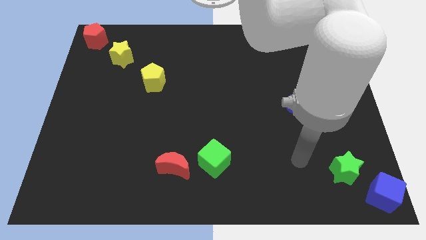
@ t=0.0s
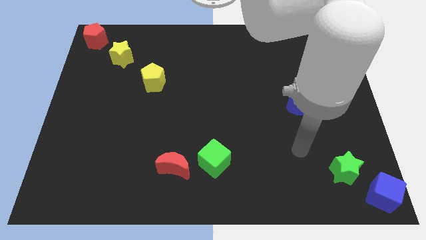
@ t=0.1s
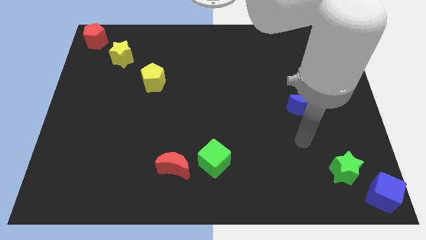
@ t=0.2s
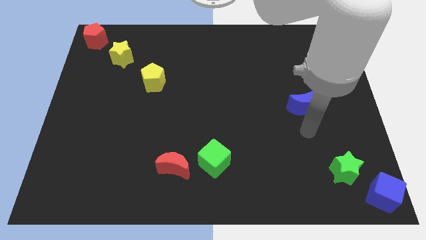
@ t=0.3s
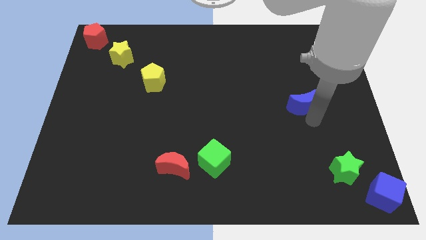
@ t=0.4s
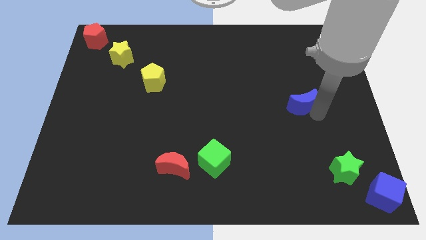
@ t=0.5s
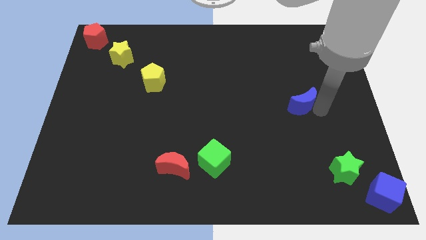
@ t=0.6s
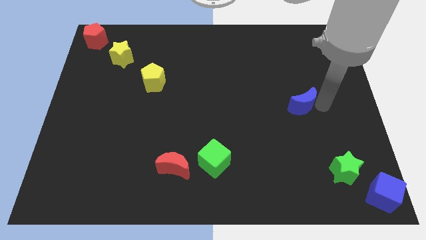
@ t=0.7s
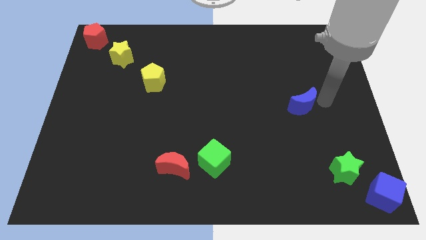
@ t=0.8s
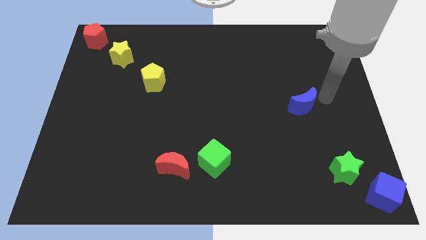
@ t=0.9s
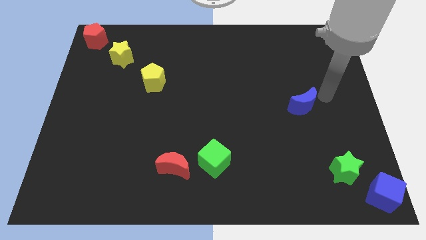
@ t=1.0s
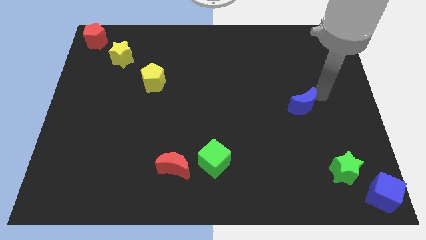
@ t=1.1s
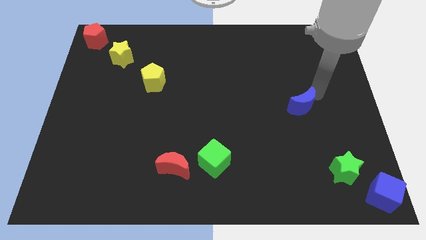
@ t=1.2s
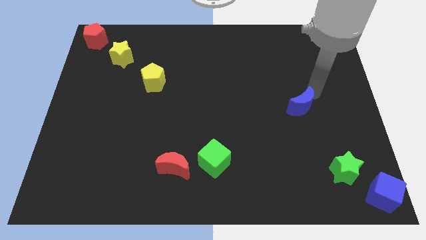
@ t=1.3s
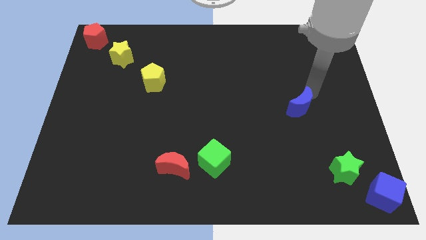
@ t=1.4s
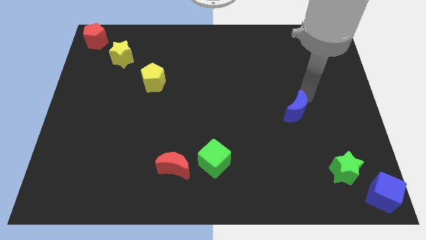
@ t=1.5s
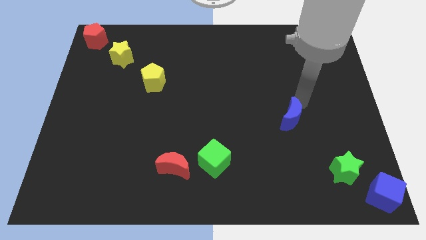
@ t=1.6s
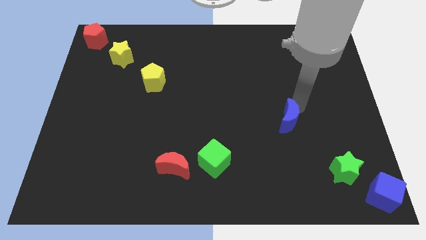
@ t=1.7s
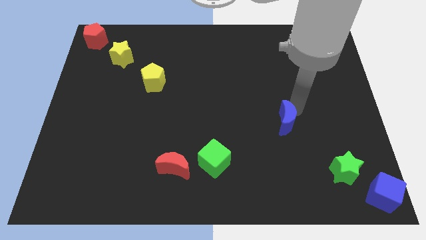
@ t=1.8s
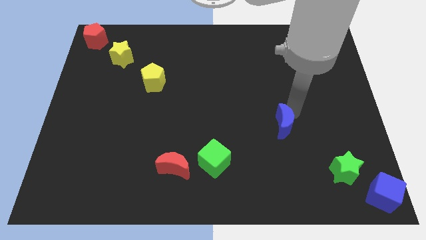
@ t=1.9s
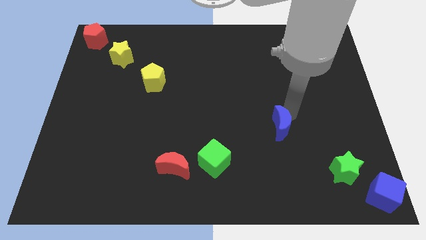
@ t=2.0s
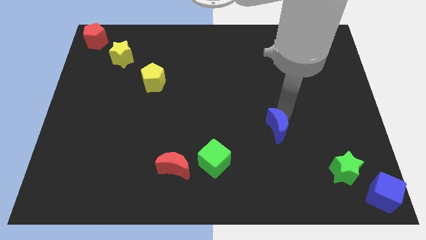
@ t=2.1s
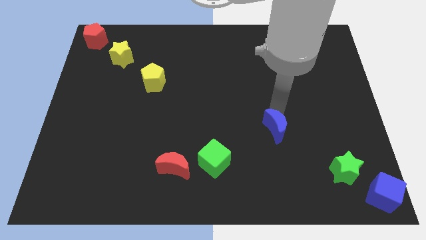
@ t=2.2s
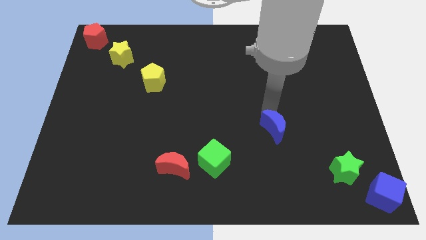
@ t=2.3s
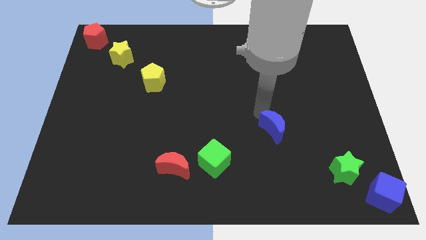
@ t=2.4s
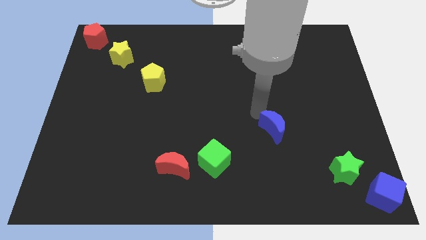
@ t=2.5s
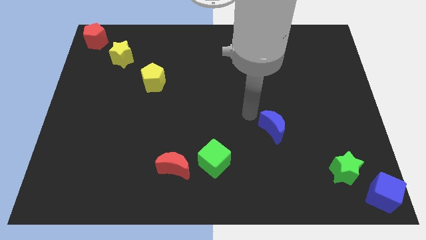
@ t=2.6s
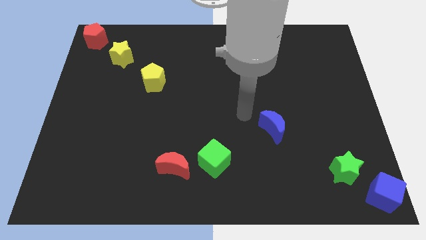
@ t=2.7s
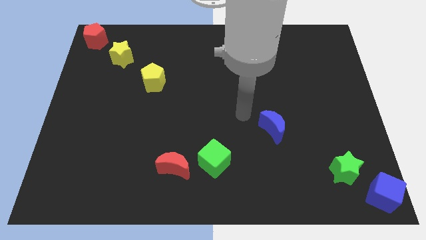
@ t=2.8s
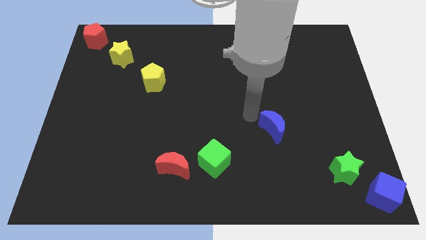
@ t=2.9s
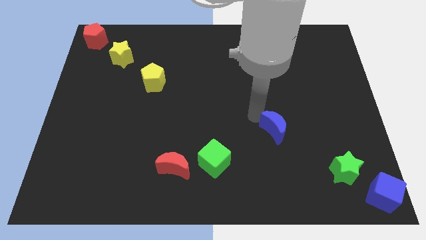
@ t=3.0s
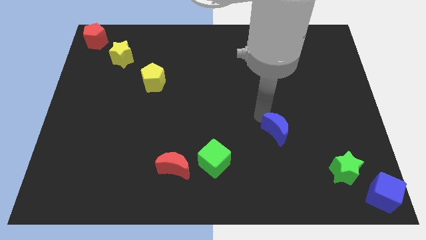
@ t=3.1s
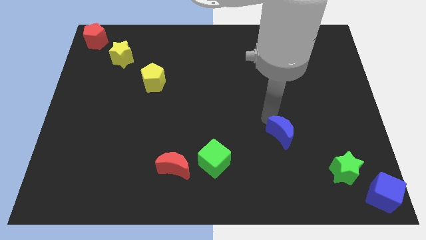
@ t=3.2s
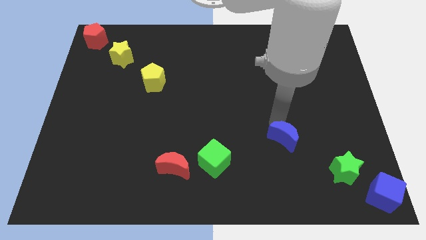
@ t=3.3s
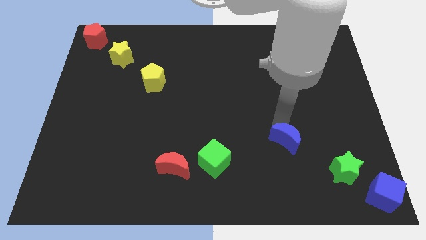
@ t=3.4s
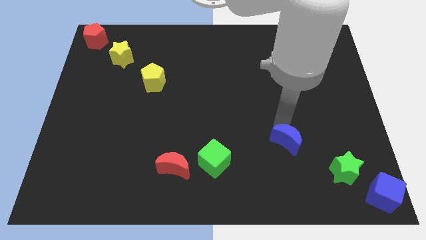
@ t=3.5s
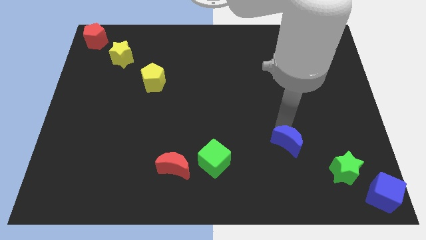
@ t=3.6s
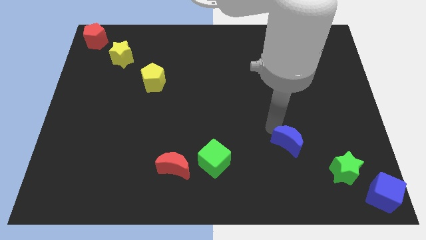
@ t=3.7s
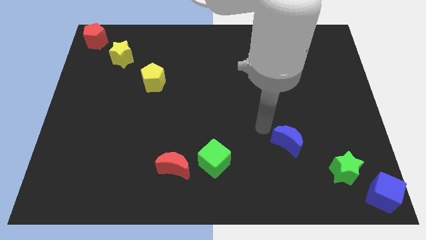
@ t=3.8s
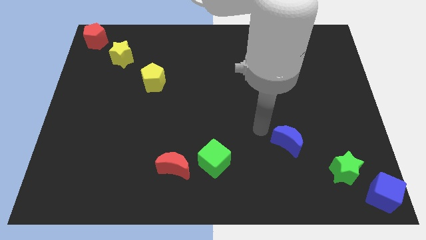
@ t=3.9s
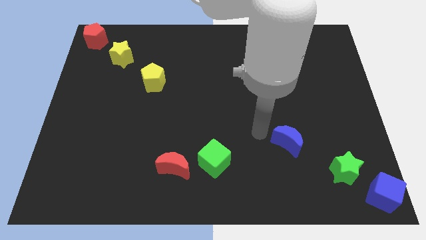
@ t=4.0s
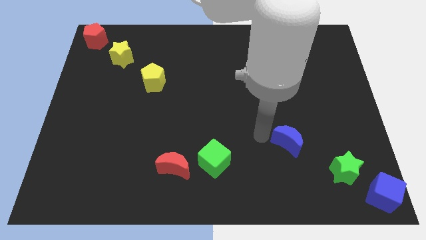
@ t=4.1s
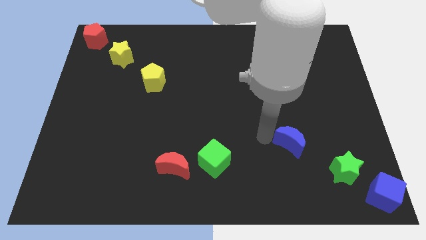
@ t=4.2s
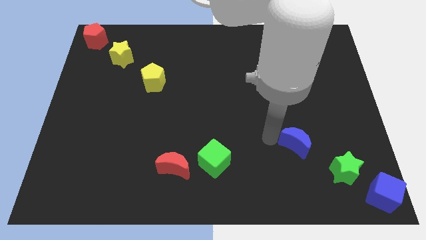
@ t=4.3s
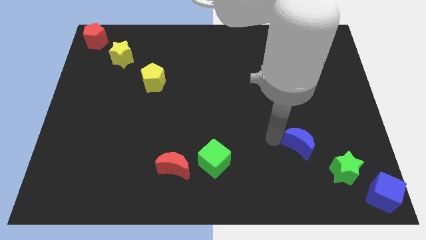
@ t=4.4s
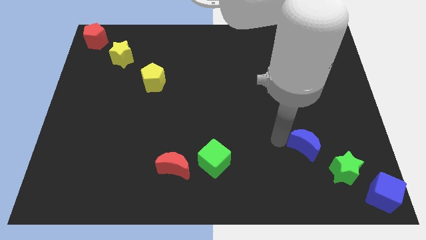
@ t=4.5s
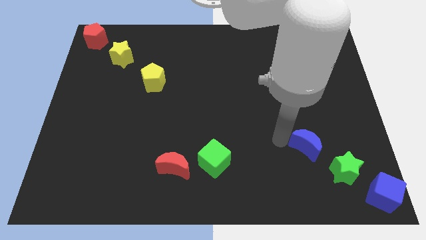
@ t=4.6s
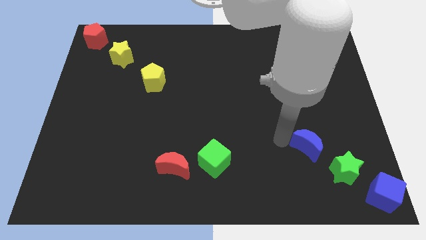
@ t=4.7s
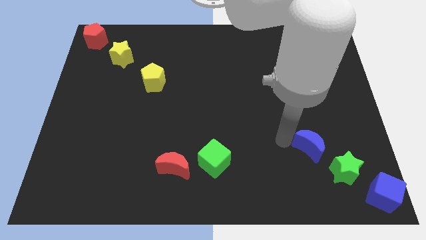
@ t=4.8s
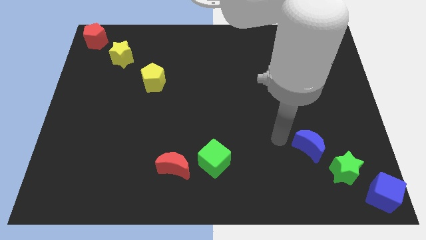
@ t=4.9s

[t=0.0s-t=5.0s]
move blue crescent diagonally top left of the green star

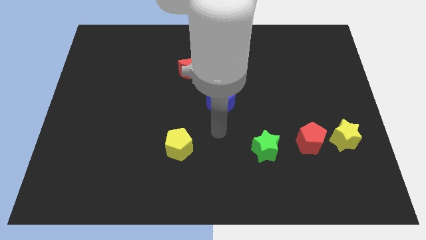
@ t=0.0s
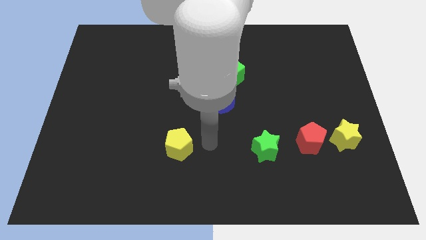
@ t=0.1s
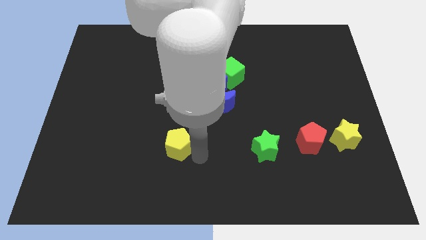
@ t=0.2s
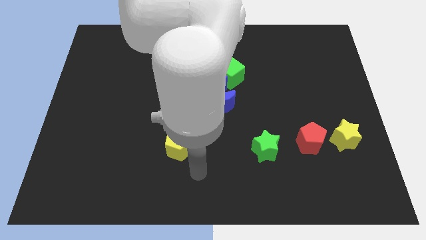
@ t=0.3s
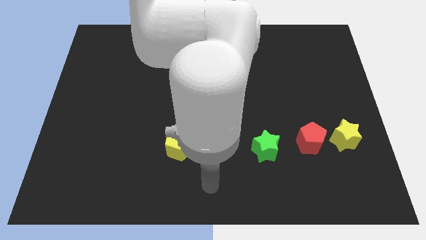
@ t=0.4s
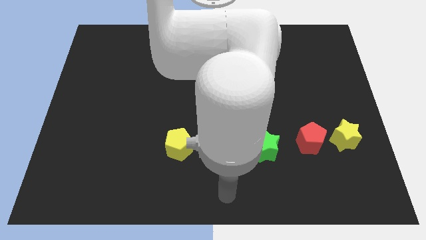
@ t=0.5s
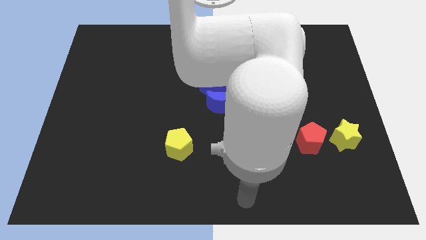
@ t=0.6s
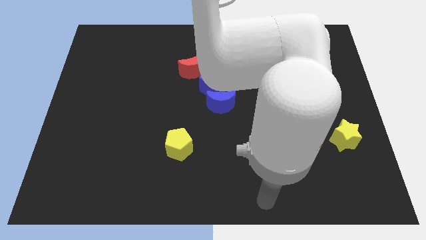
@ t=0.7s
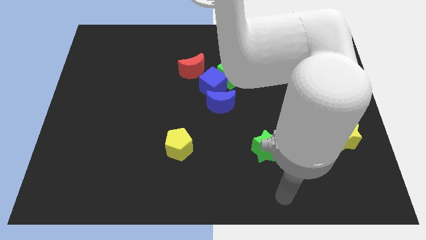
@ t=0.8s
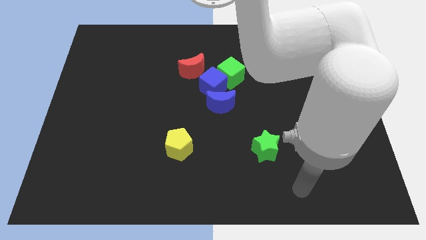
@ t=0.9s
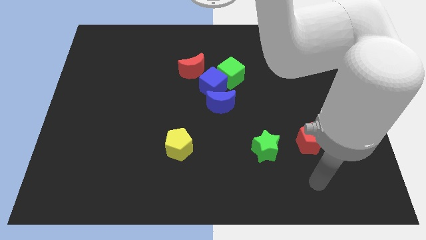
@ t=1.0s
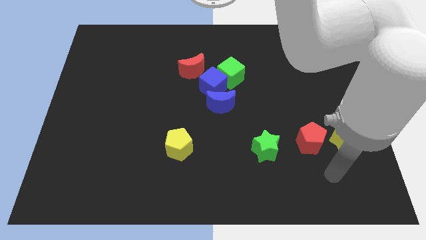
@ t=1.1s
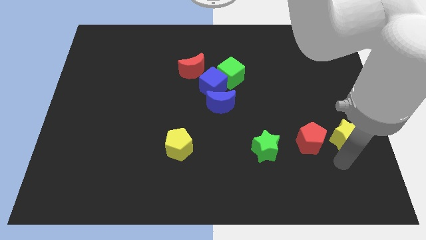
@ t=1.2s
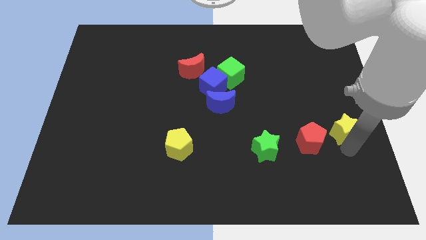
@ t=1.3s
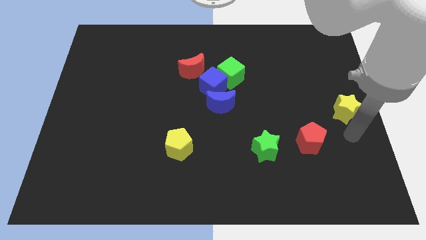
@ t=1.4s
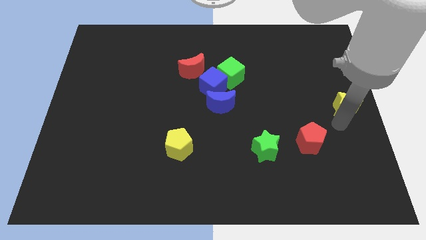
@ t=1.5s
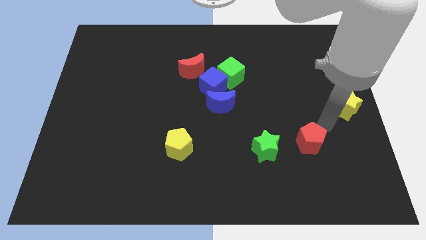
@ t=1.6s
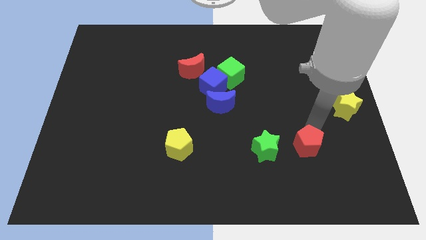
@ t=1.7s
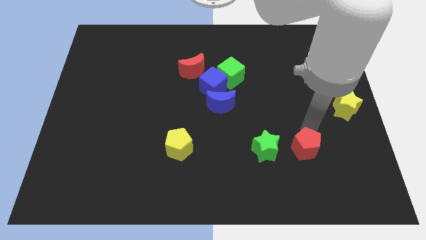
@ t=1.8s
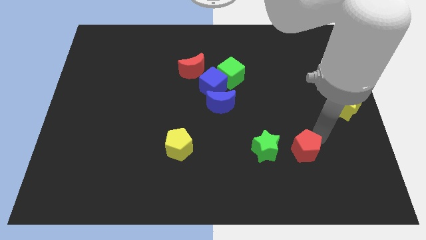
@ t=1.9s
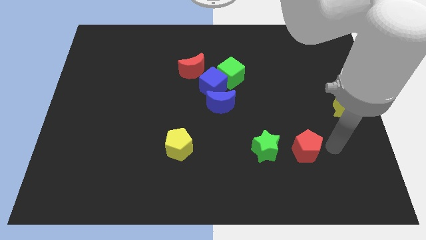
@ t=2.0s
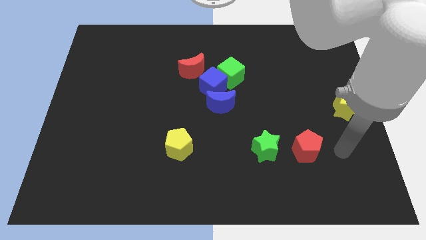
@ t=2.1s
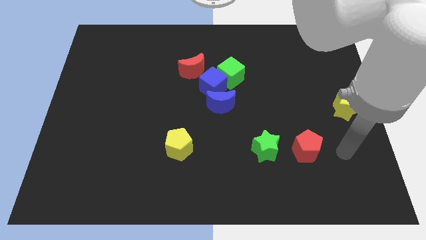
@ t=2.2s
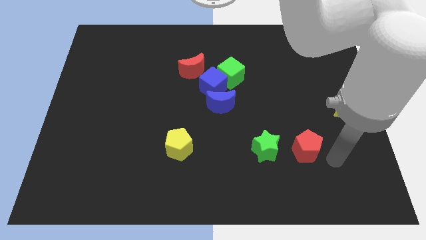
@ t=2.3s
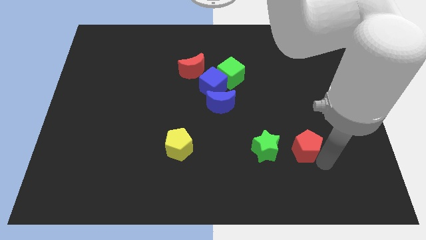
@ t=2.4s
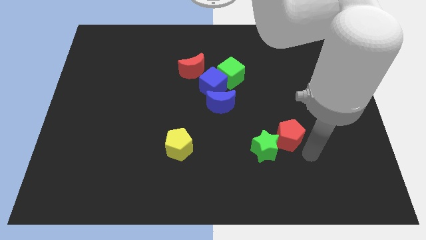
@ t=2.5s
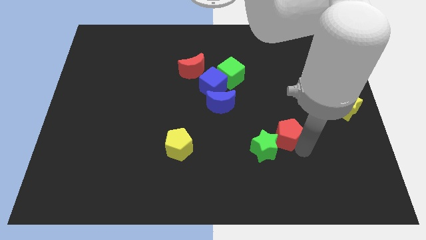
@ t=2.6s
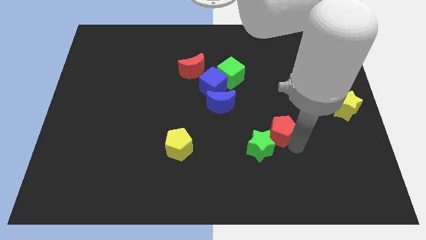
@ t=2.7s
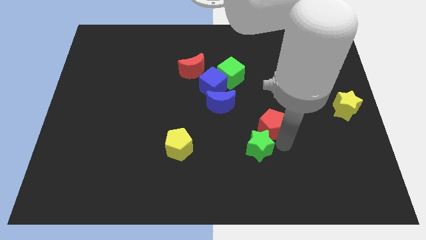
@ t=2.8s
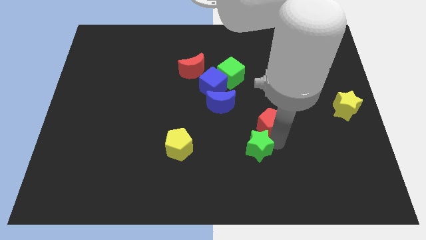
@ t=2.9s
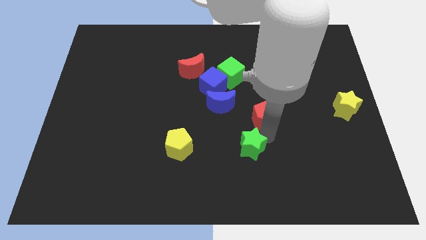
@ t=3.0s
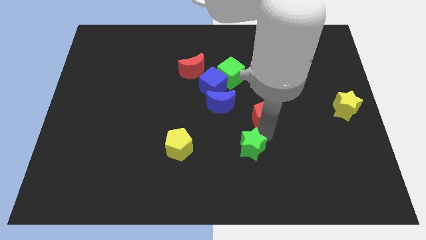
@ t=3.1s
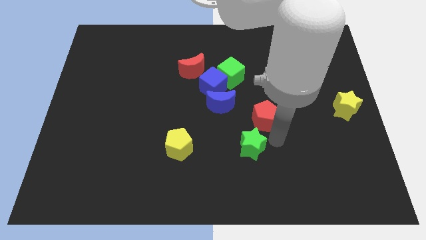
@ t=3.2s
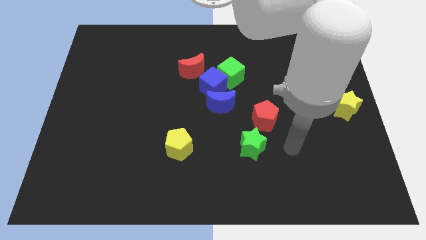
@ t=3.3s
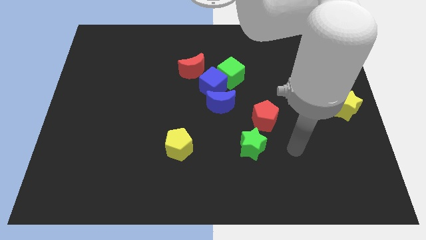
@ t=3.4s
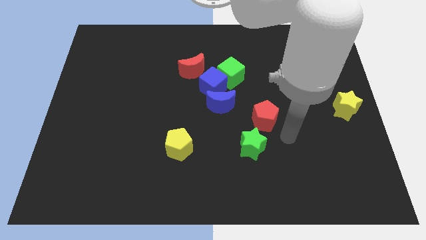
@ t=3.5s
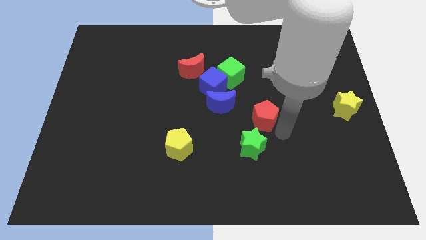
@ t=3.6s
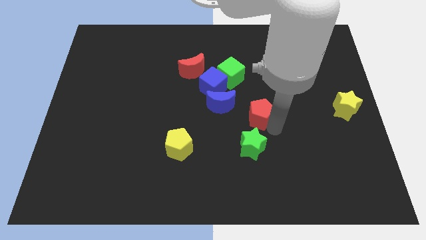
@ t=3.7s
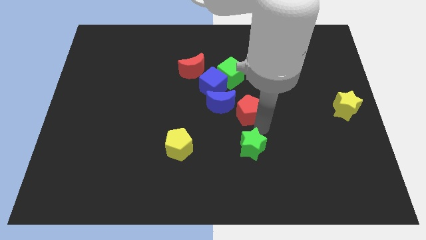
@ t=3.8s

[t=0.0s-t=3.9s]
move the red pentagon to the top side of the green star

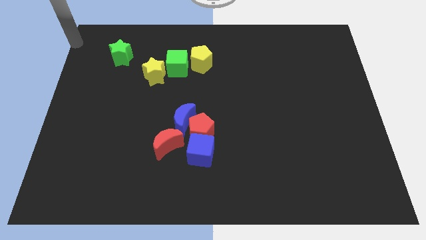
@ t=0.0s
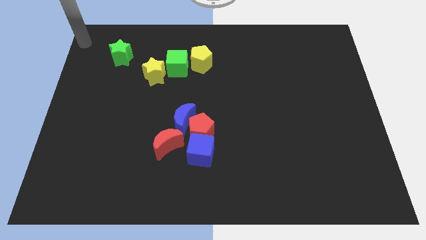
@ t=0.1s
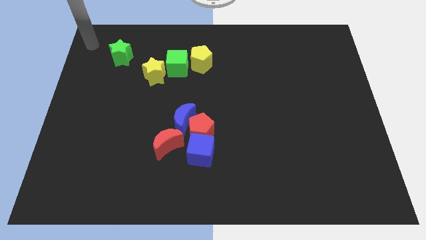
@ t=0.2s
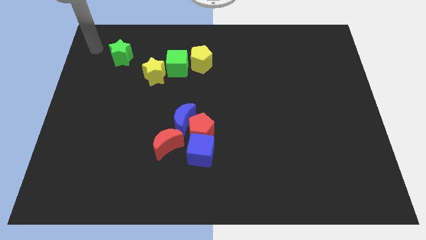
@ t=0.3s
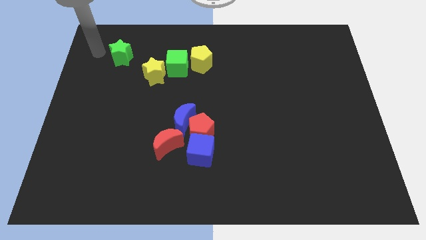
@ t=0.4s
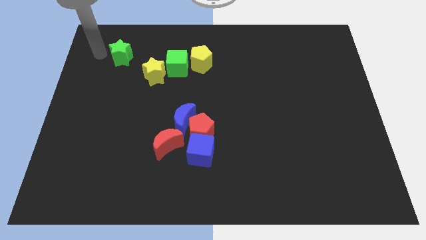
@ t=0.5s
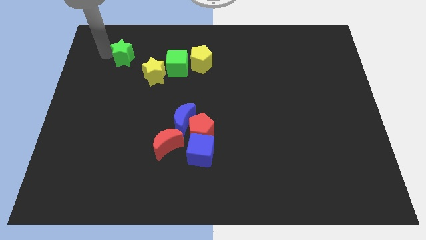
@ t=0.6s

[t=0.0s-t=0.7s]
touch at the left side of the green star
